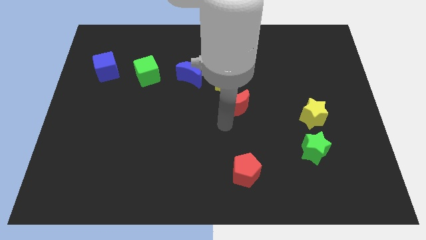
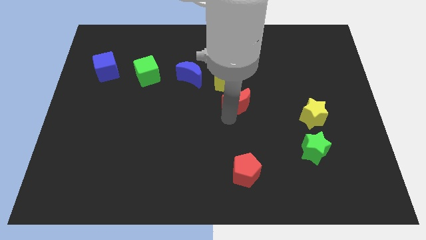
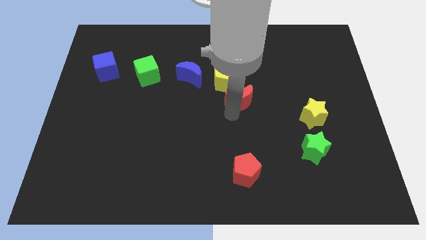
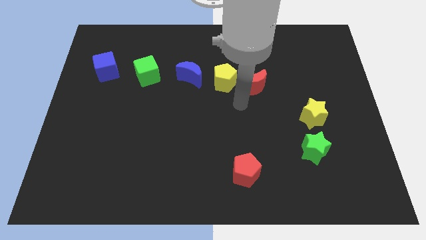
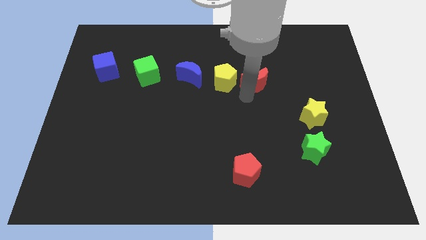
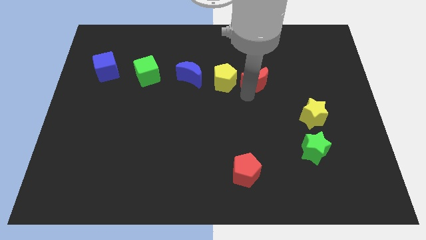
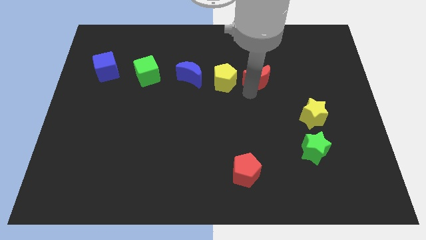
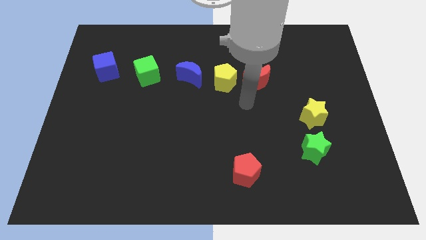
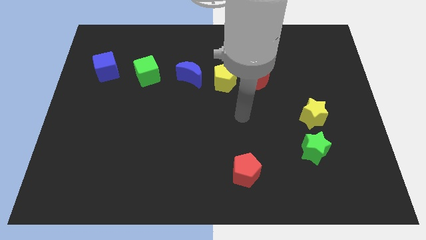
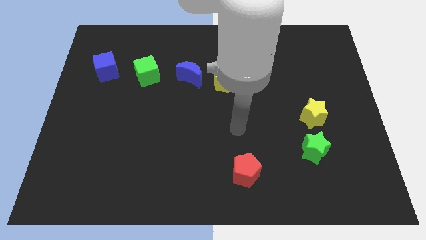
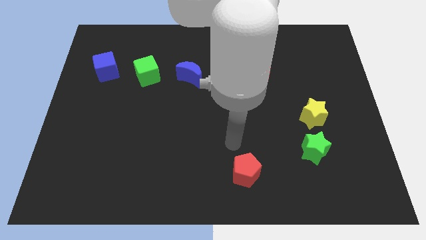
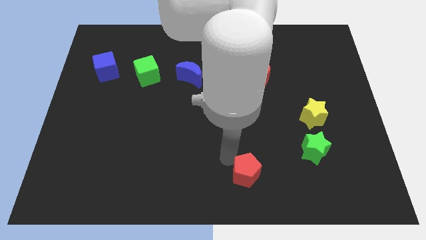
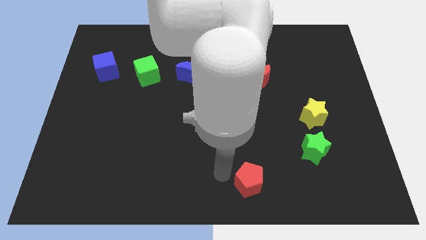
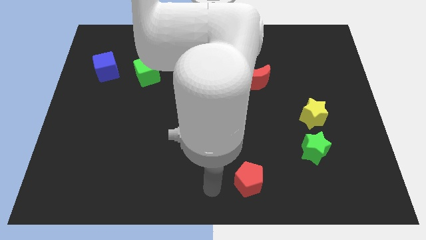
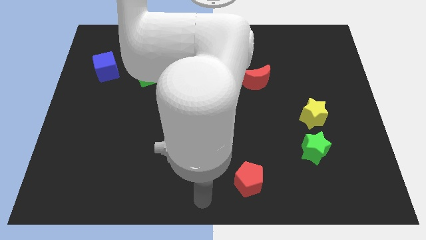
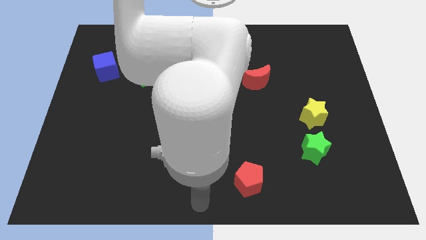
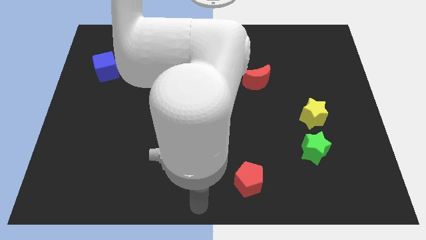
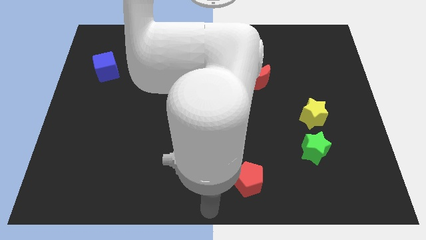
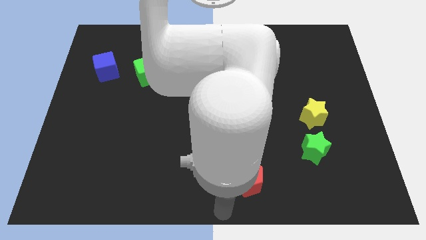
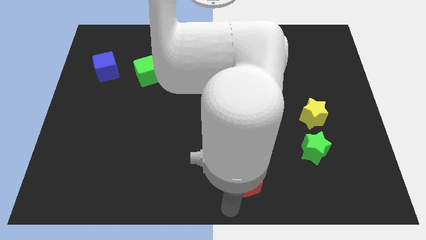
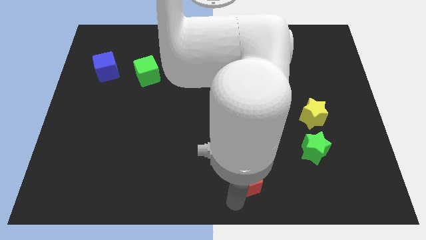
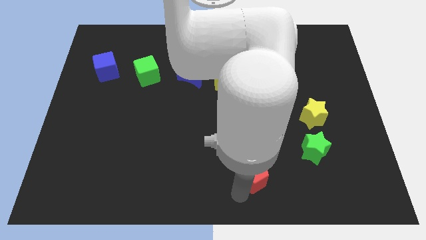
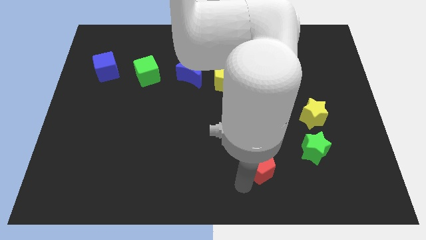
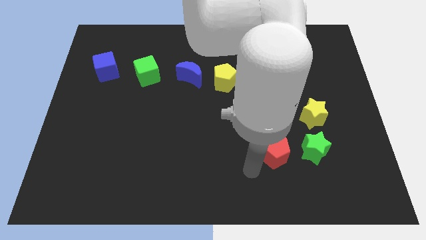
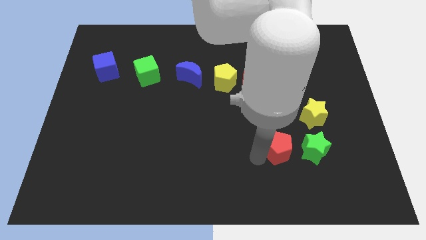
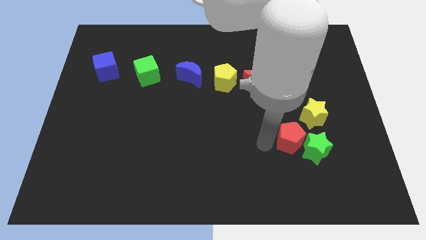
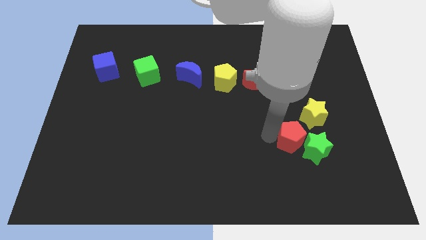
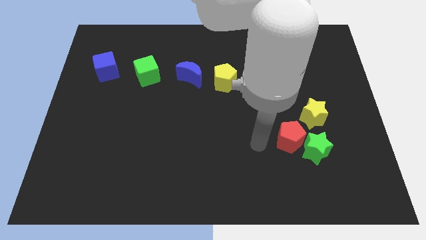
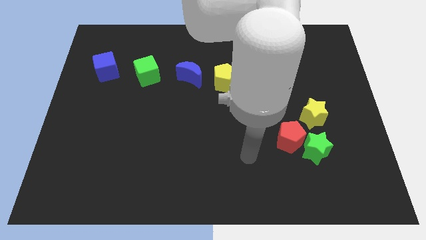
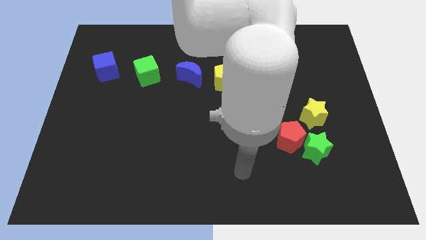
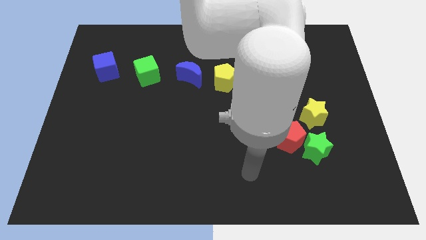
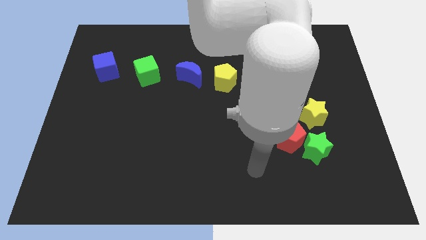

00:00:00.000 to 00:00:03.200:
push red pentagon into green star

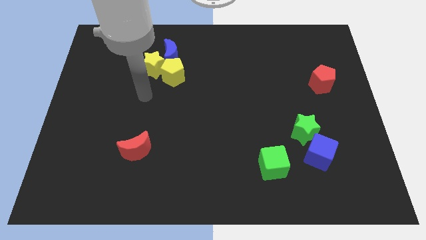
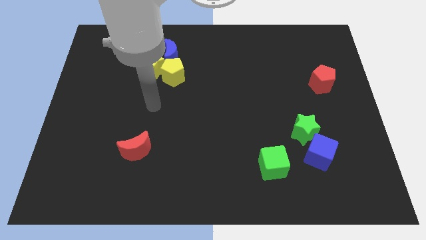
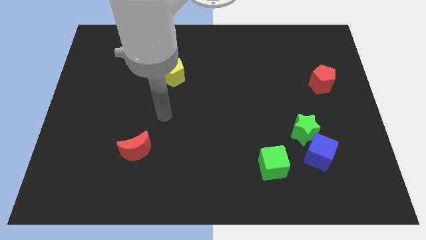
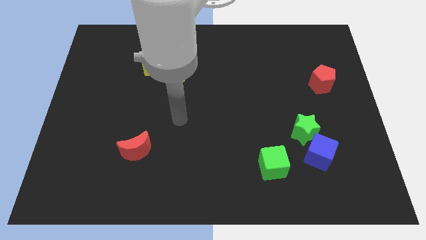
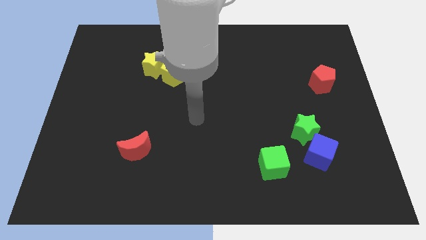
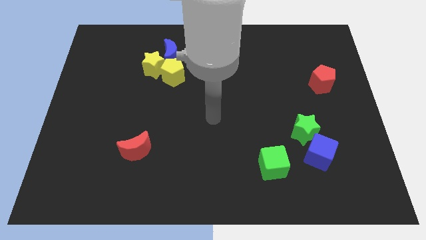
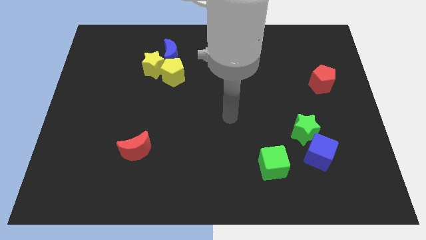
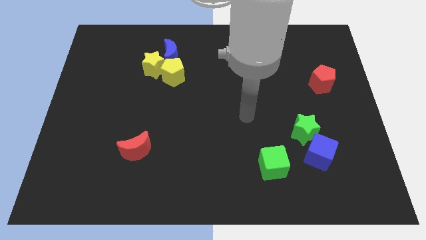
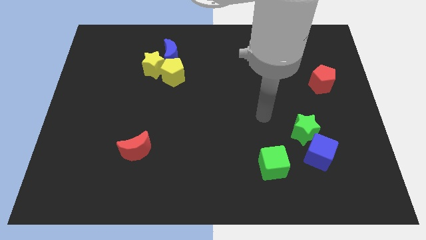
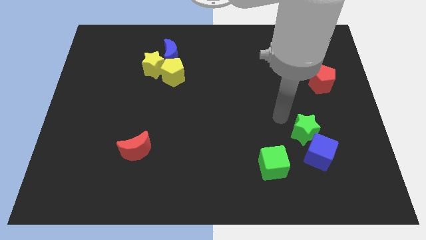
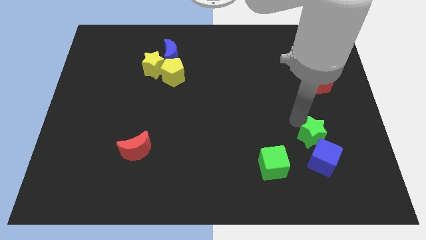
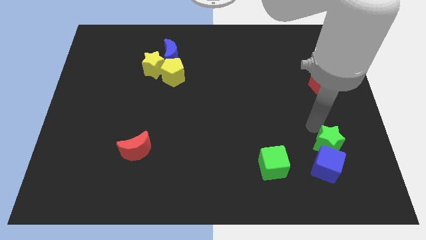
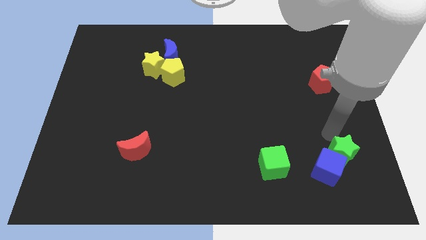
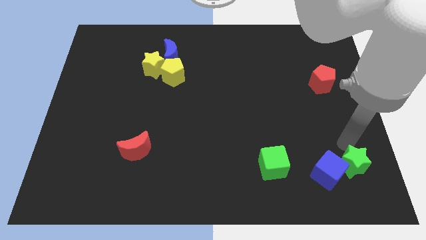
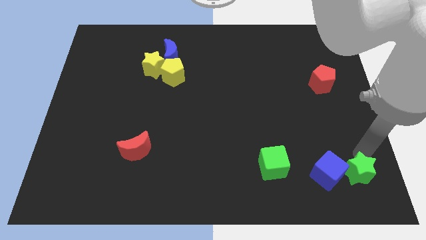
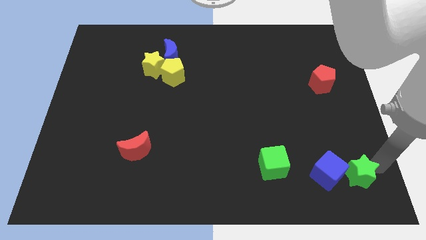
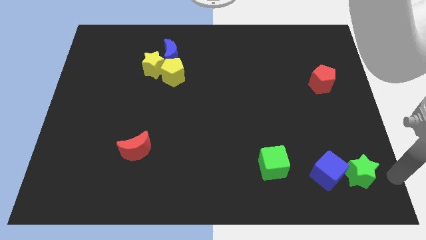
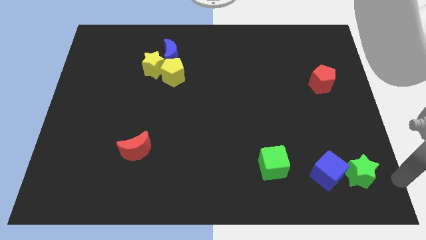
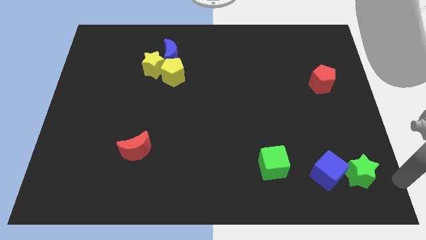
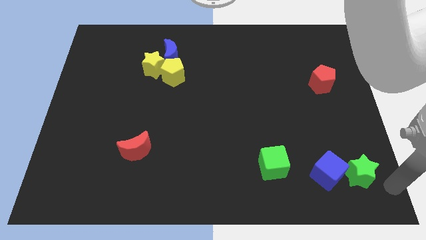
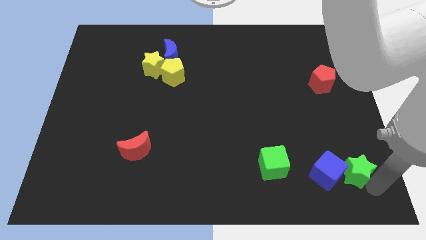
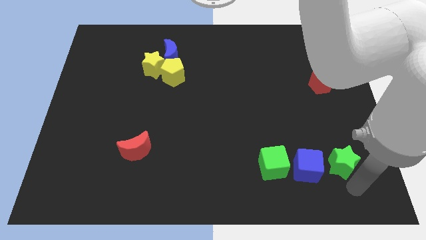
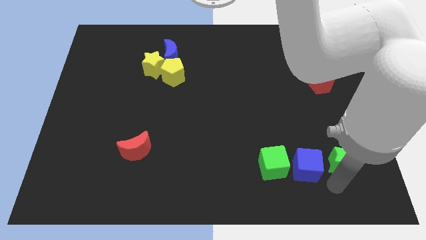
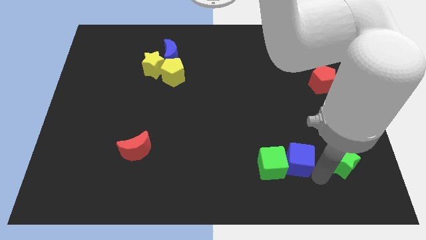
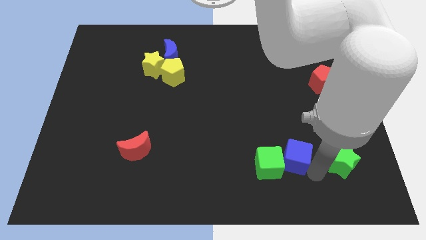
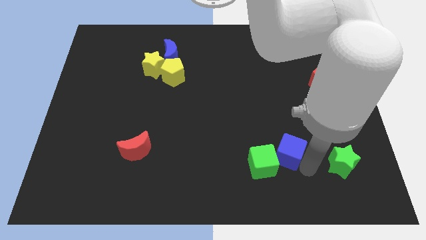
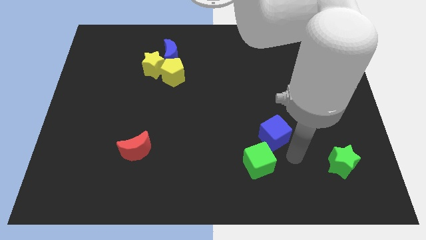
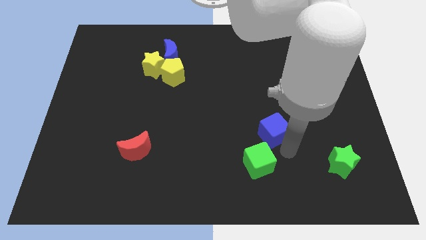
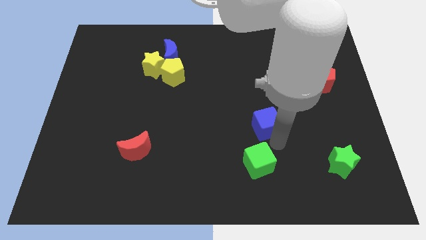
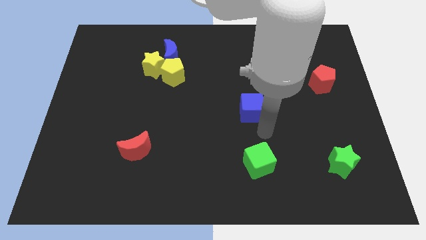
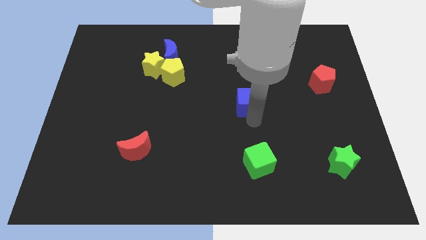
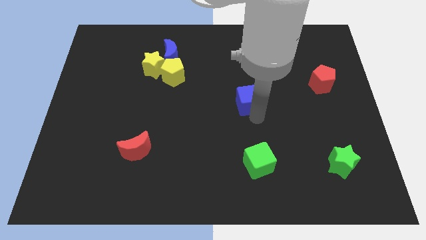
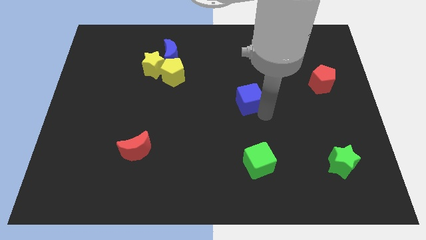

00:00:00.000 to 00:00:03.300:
move the blue cube vertically to the top side of the green cube

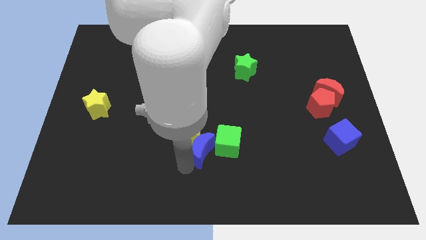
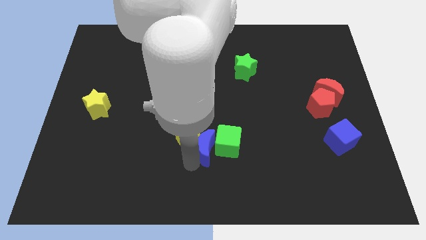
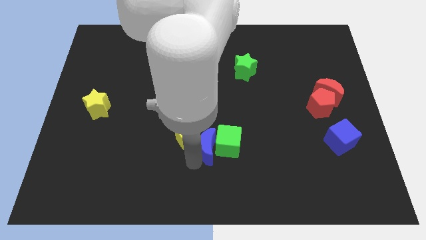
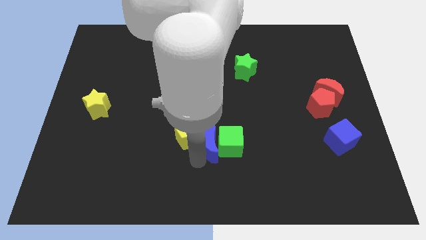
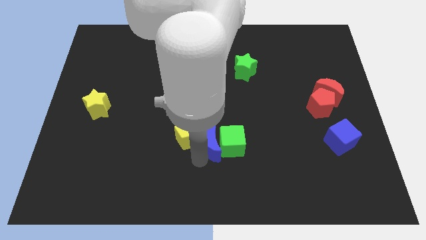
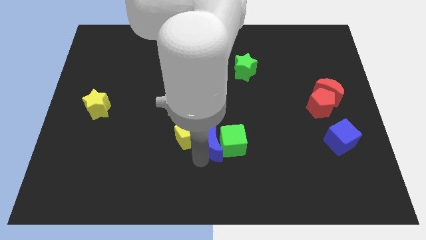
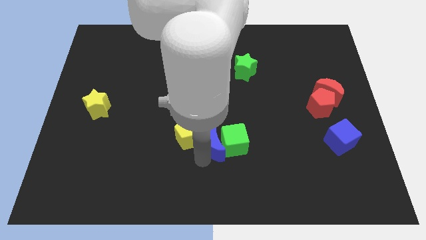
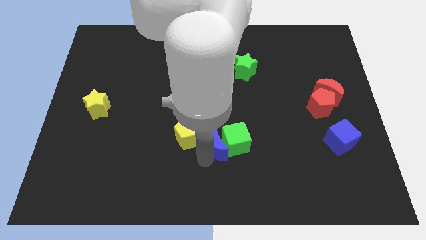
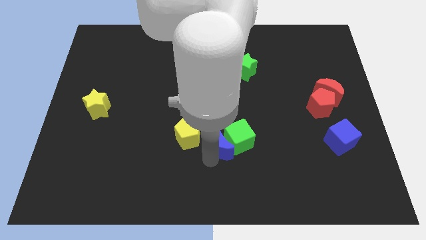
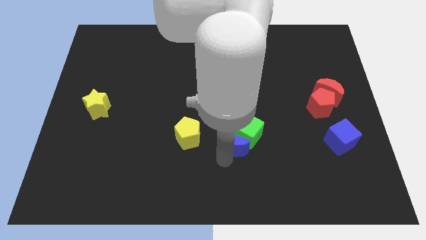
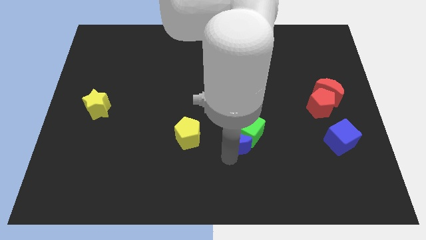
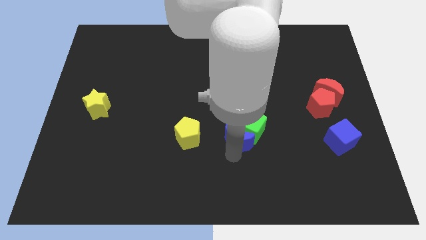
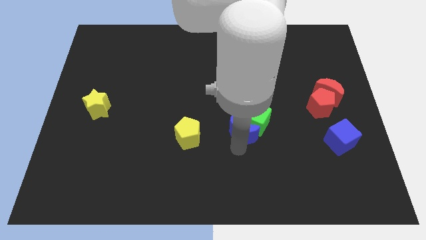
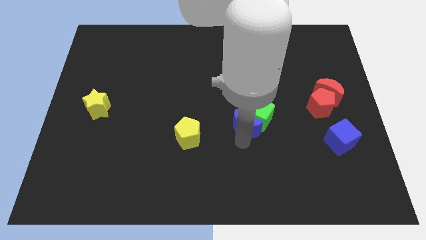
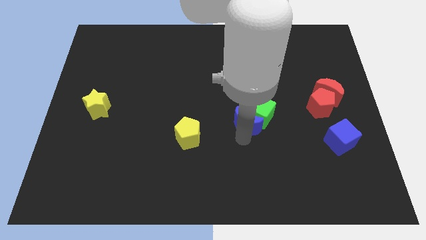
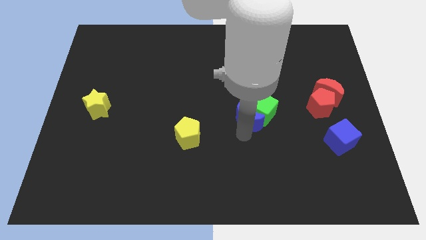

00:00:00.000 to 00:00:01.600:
push the blue crescent along with green cube towards right

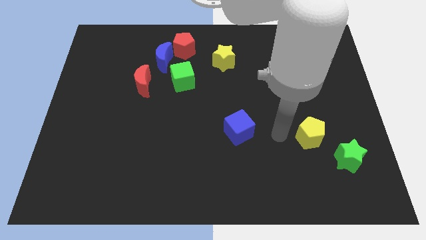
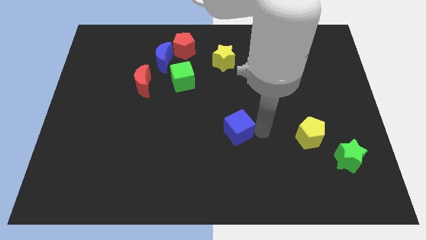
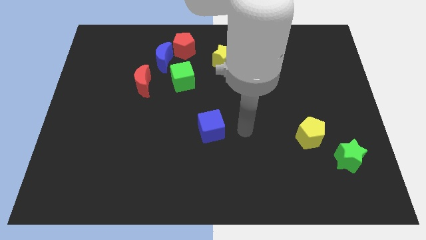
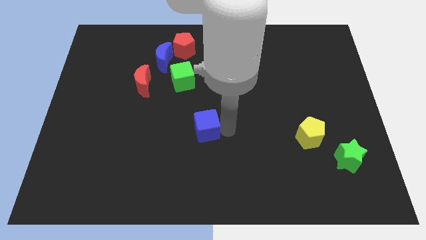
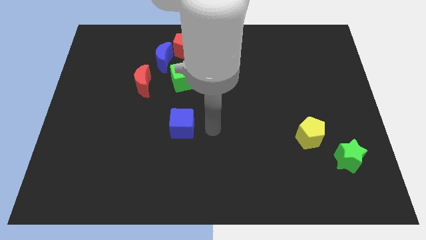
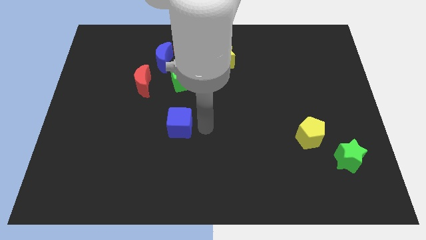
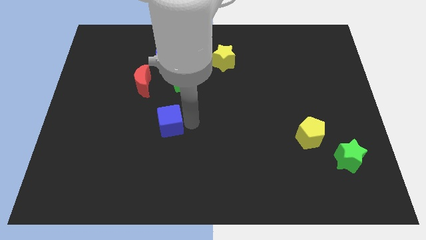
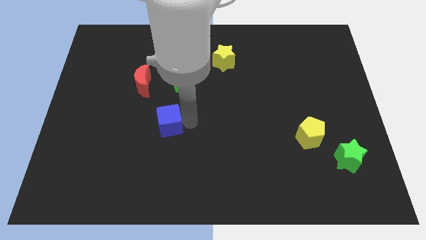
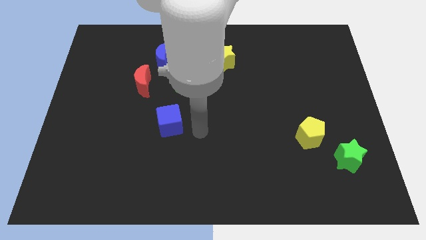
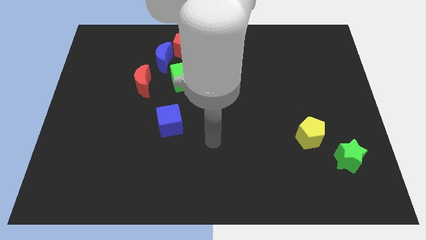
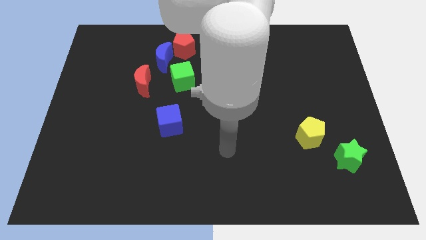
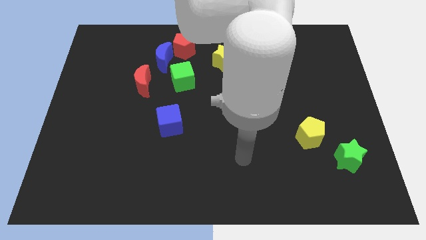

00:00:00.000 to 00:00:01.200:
place the blue cube vertically below the blue moon
